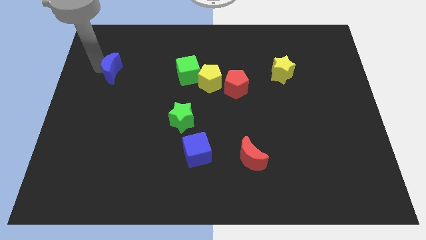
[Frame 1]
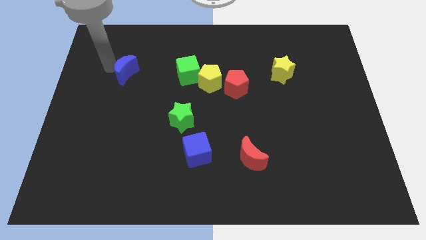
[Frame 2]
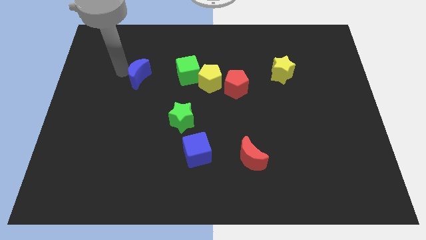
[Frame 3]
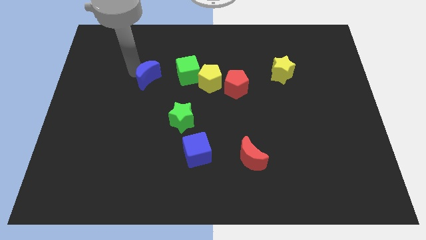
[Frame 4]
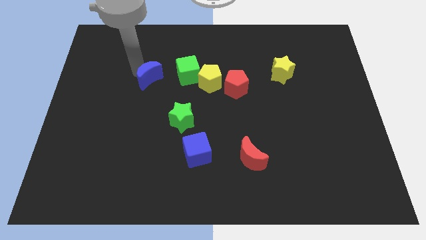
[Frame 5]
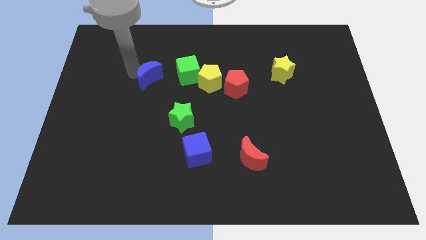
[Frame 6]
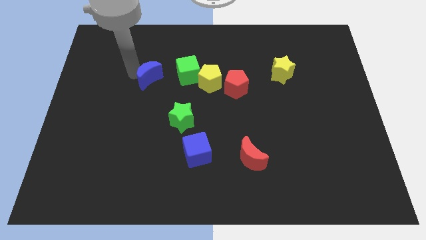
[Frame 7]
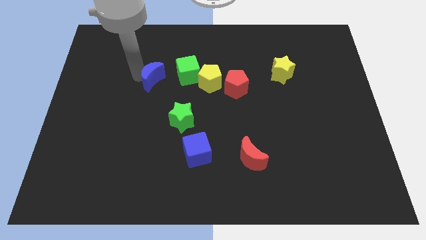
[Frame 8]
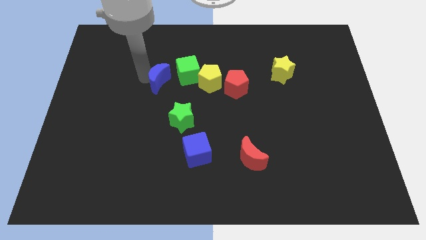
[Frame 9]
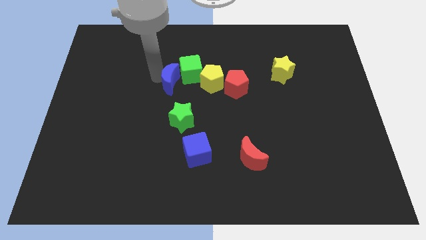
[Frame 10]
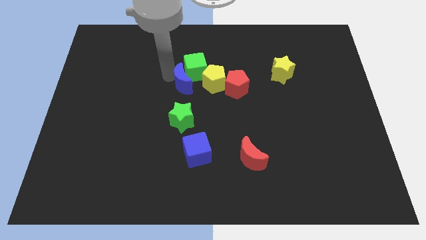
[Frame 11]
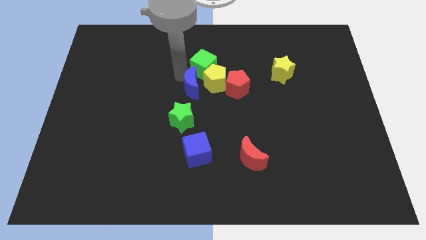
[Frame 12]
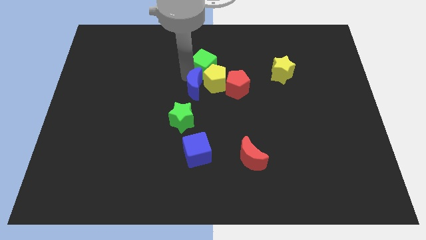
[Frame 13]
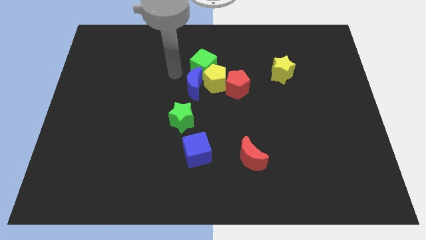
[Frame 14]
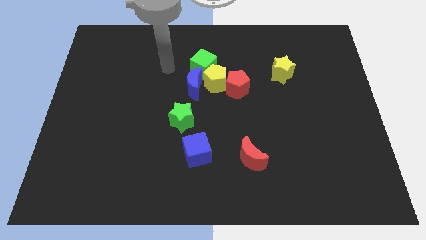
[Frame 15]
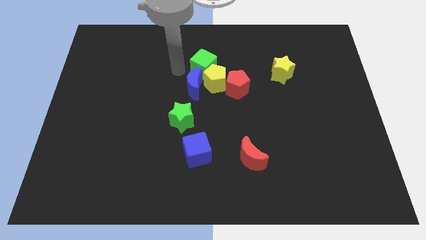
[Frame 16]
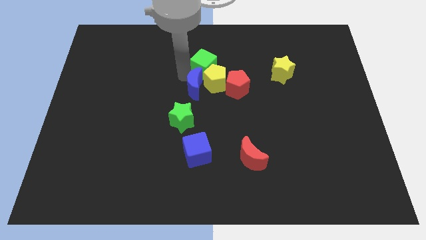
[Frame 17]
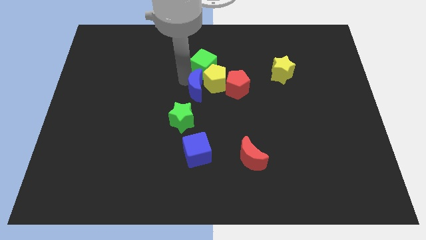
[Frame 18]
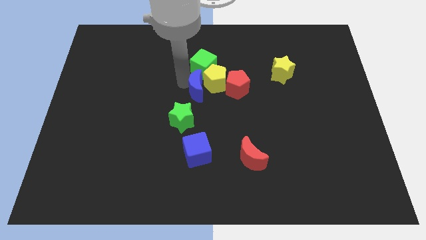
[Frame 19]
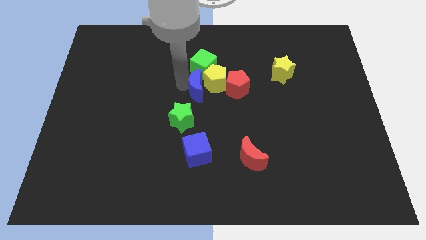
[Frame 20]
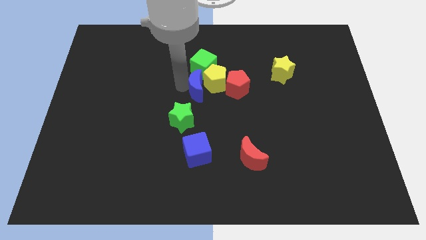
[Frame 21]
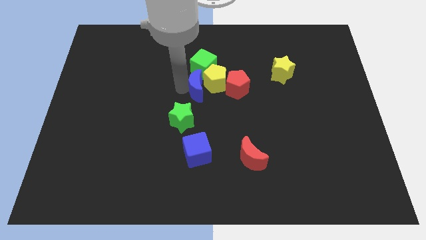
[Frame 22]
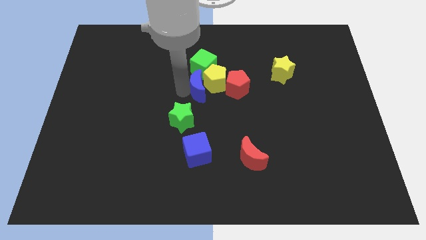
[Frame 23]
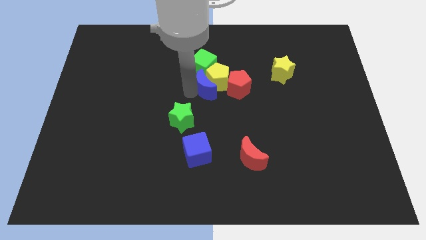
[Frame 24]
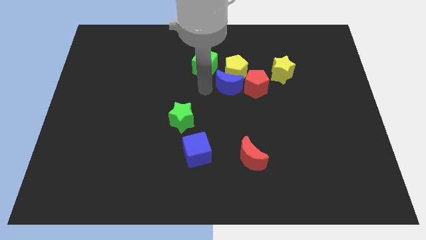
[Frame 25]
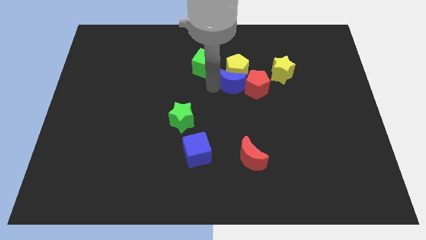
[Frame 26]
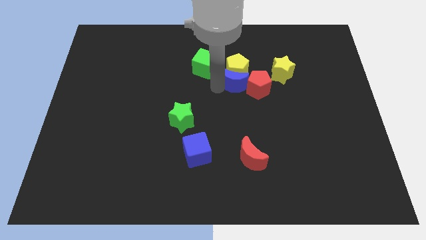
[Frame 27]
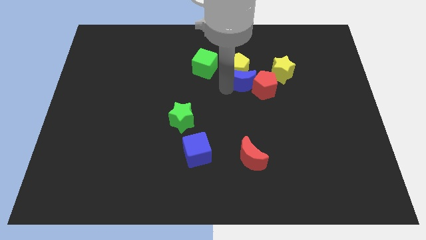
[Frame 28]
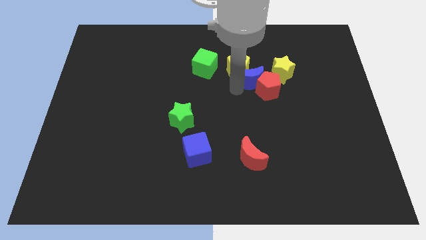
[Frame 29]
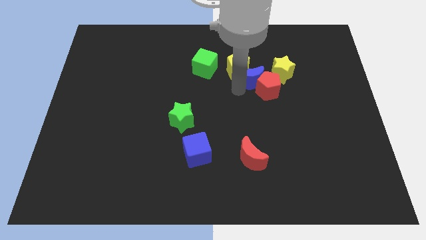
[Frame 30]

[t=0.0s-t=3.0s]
move the blue crescent towards the bottom of the yellow pentagon

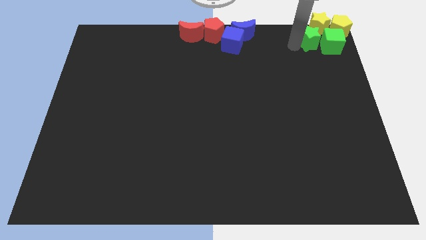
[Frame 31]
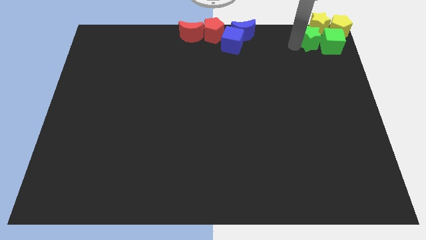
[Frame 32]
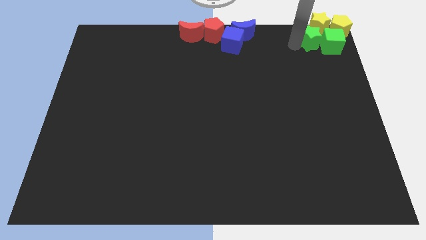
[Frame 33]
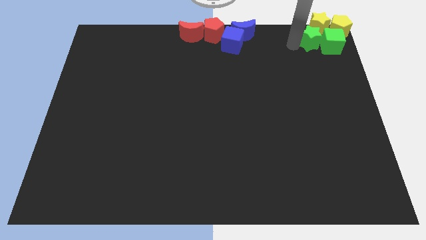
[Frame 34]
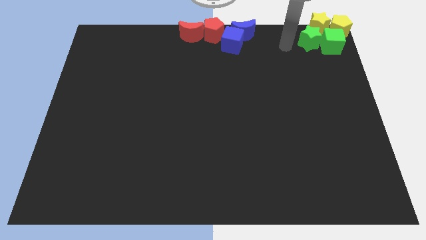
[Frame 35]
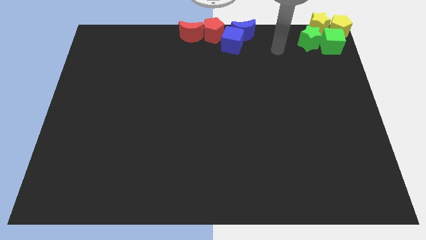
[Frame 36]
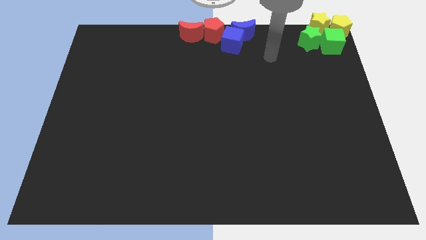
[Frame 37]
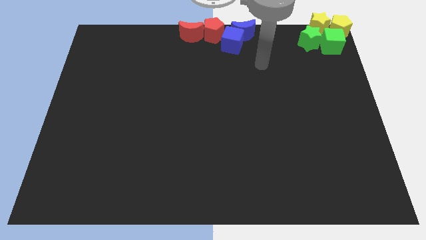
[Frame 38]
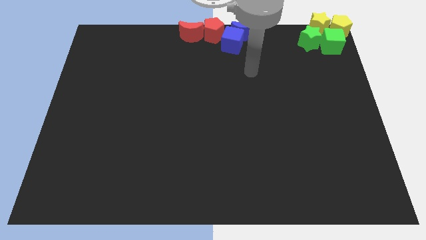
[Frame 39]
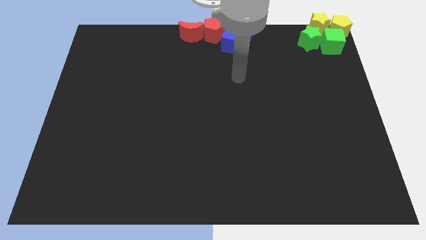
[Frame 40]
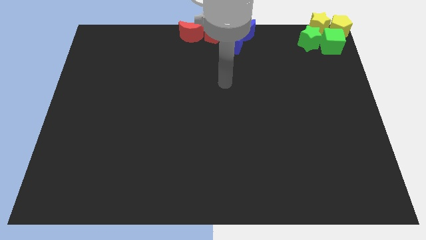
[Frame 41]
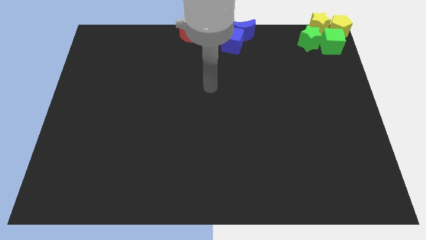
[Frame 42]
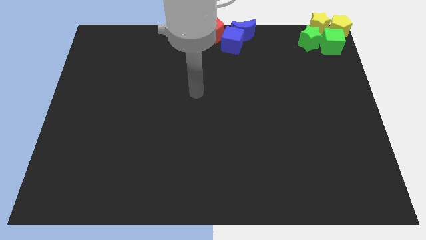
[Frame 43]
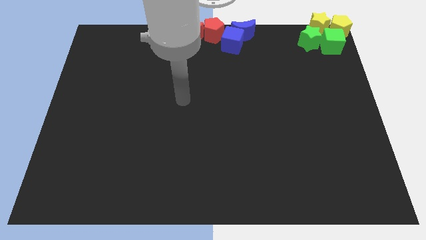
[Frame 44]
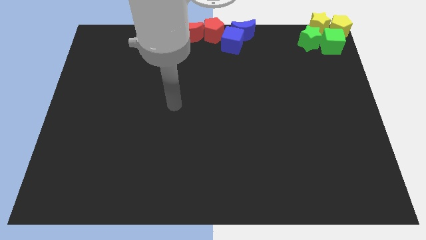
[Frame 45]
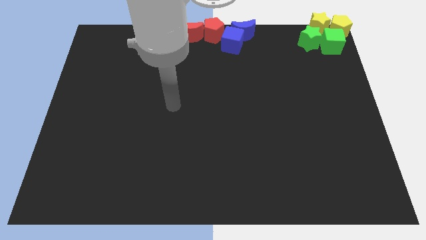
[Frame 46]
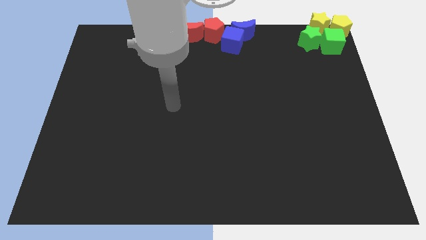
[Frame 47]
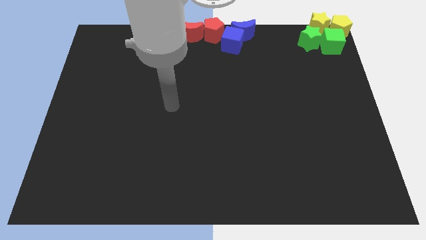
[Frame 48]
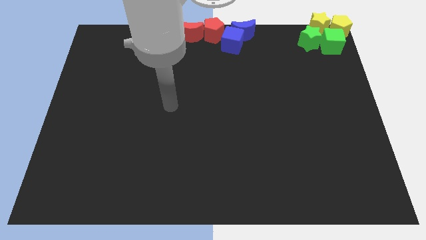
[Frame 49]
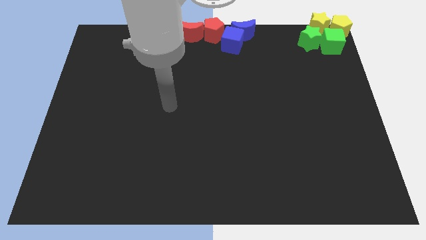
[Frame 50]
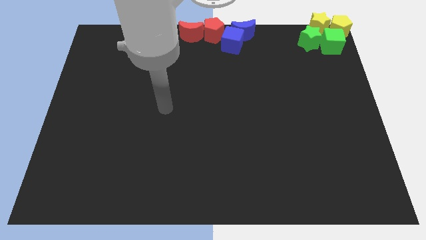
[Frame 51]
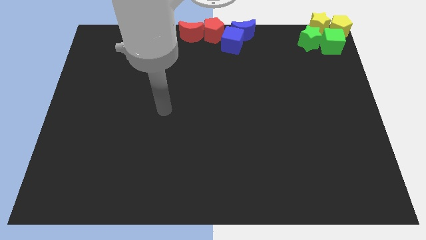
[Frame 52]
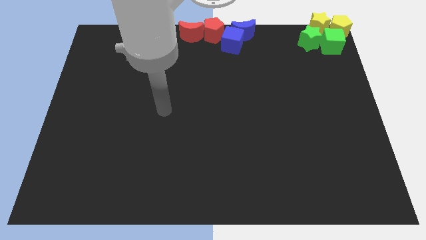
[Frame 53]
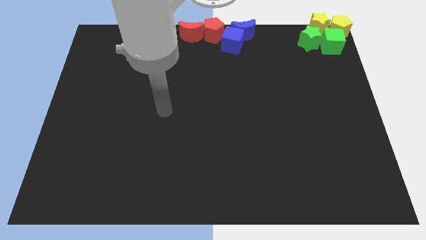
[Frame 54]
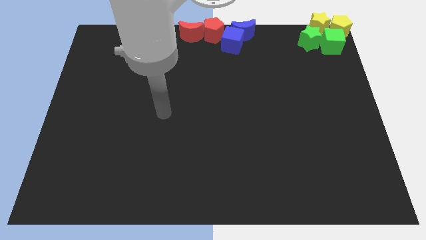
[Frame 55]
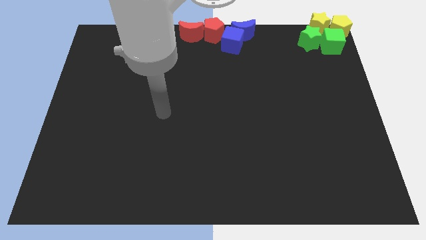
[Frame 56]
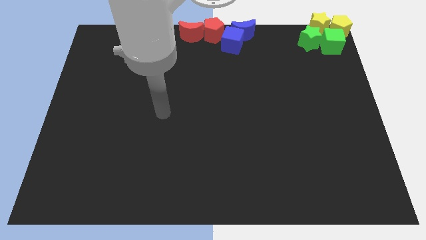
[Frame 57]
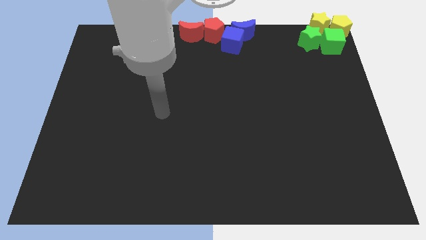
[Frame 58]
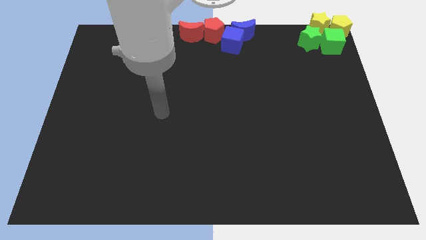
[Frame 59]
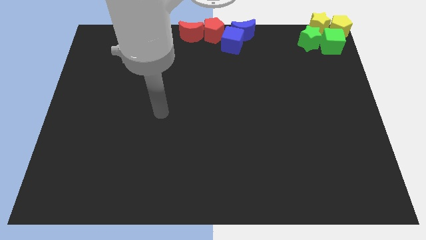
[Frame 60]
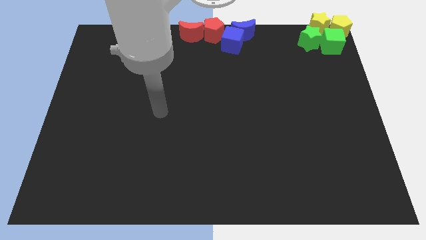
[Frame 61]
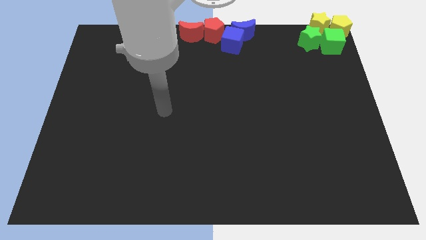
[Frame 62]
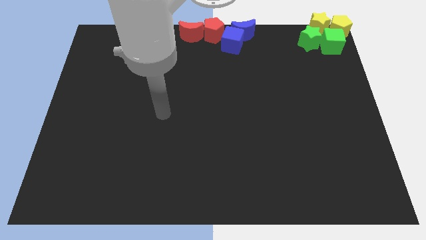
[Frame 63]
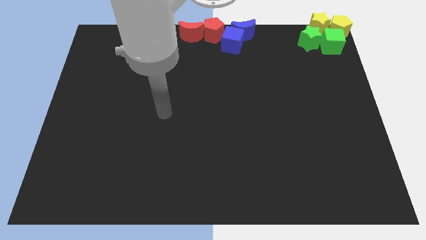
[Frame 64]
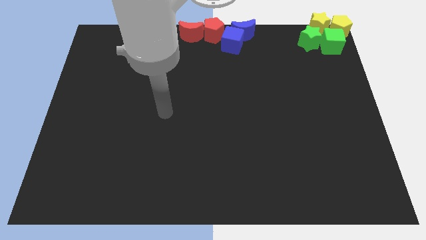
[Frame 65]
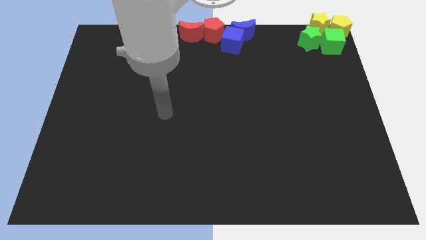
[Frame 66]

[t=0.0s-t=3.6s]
move your arm away from green star

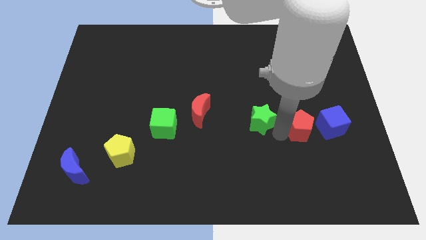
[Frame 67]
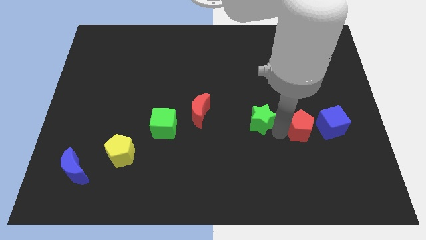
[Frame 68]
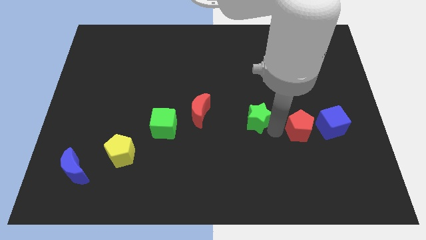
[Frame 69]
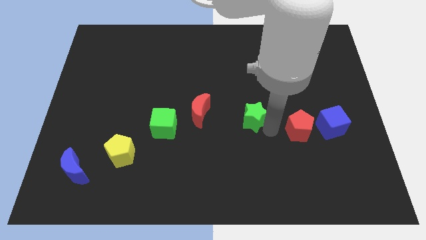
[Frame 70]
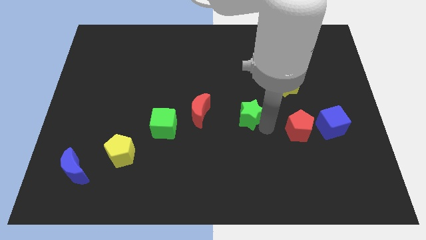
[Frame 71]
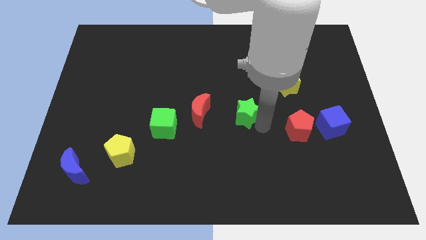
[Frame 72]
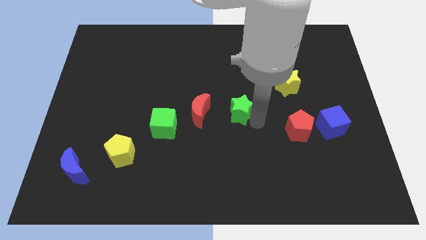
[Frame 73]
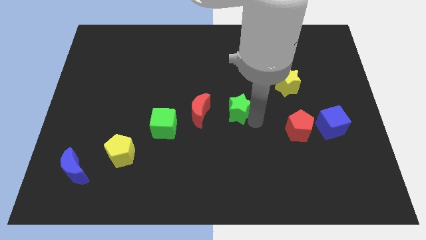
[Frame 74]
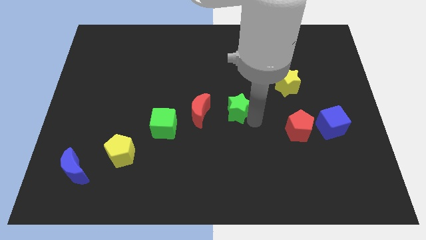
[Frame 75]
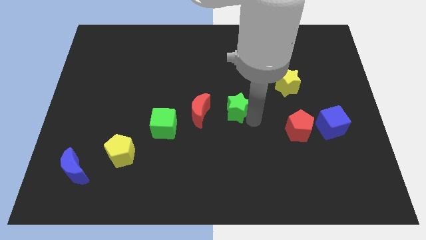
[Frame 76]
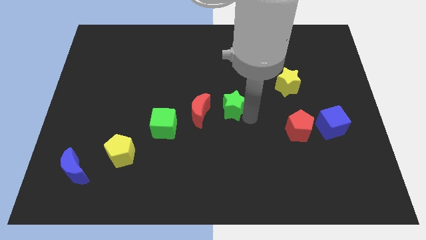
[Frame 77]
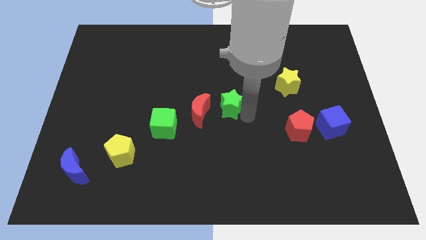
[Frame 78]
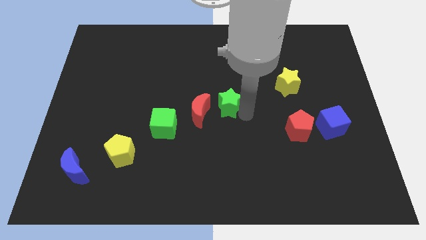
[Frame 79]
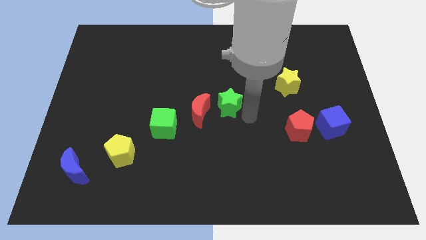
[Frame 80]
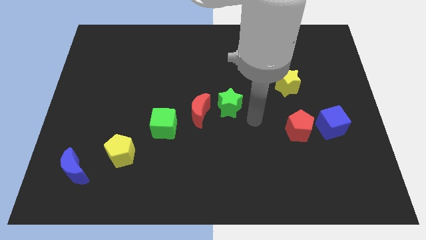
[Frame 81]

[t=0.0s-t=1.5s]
move the green star diagonally to the right of the red moon

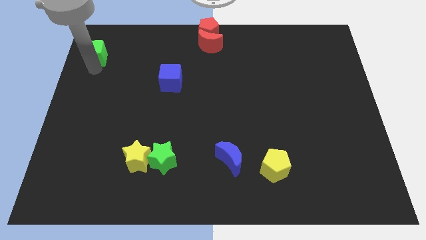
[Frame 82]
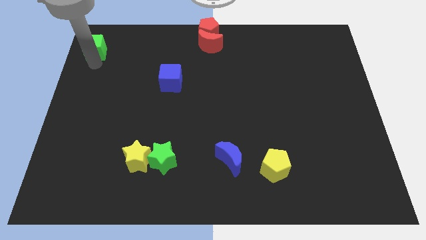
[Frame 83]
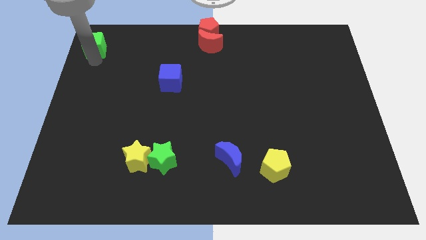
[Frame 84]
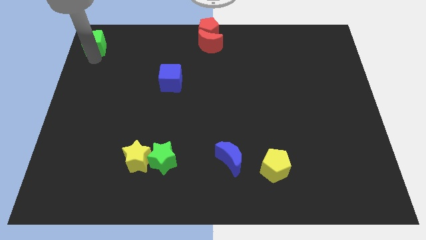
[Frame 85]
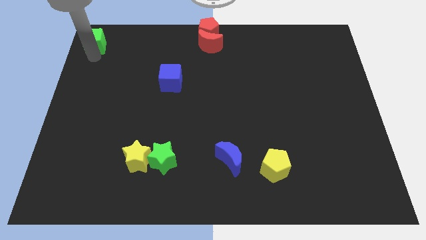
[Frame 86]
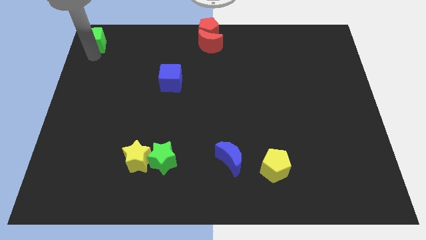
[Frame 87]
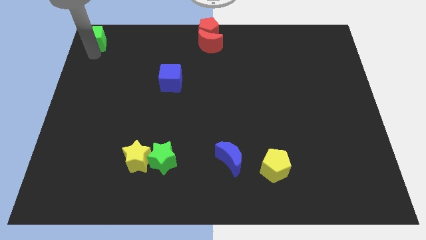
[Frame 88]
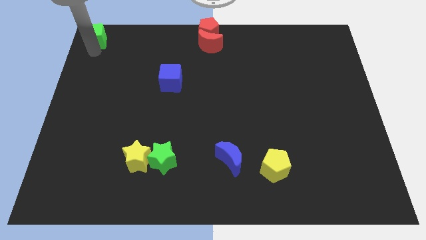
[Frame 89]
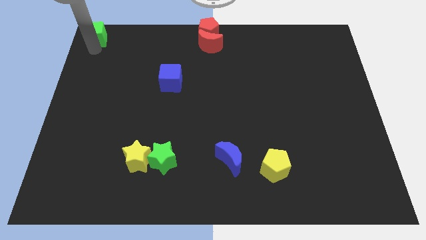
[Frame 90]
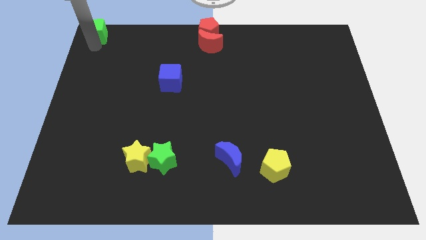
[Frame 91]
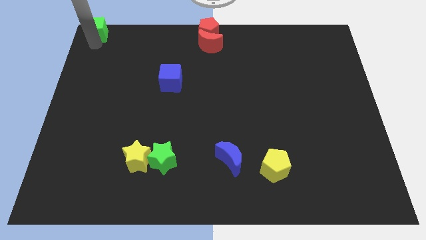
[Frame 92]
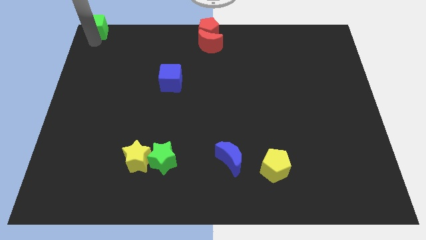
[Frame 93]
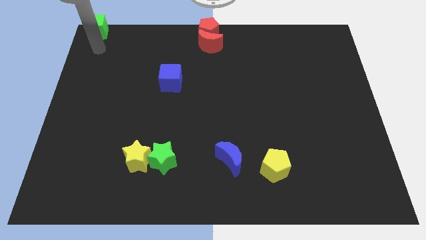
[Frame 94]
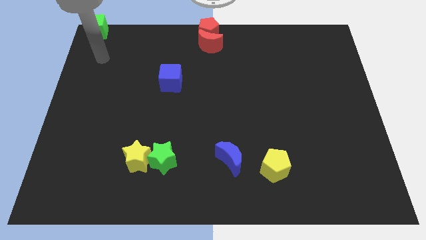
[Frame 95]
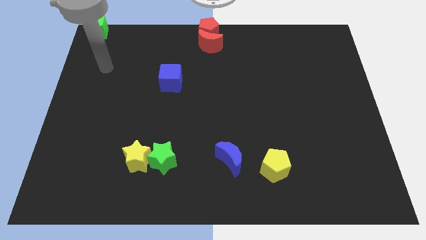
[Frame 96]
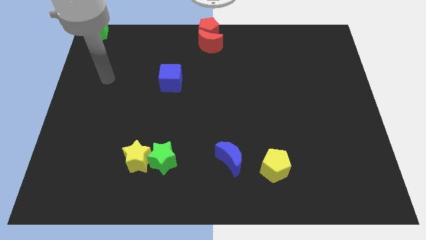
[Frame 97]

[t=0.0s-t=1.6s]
place the green cube to the left of the red blocks
